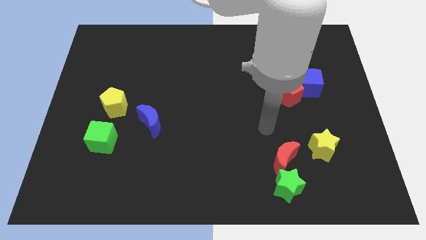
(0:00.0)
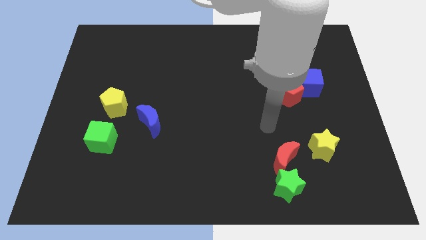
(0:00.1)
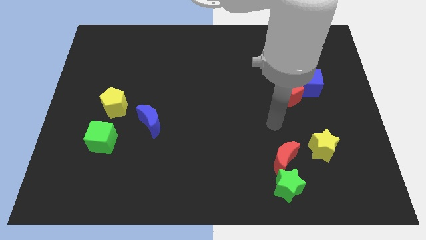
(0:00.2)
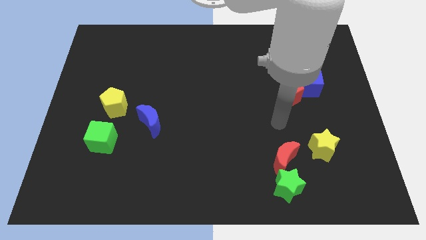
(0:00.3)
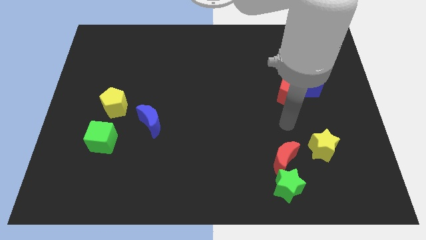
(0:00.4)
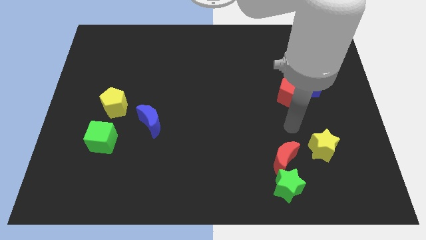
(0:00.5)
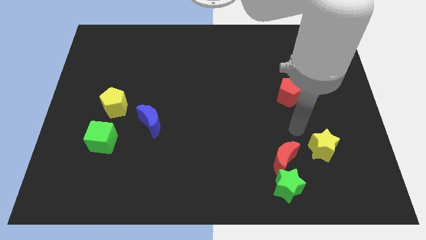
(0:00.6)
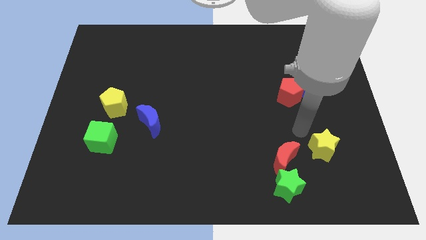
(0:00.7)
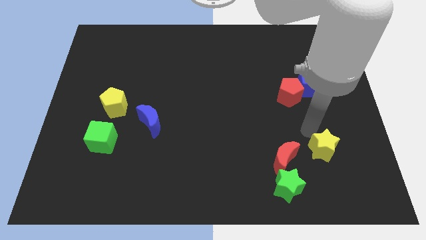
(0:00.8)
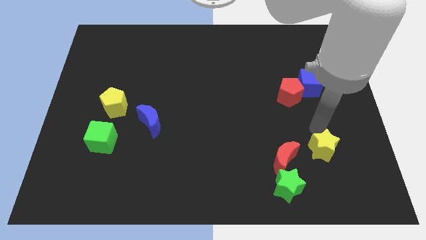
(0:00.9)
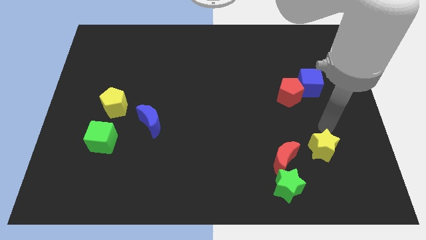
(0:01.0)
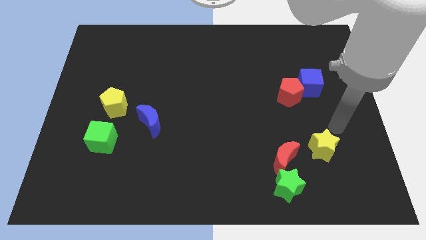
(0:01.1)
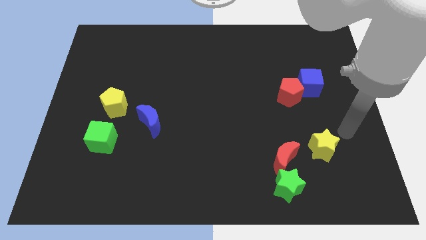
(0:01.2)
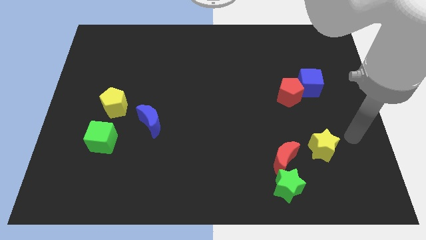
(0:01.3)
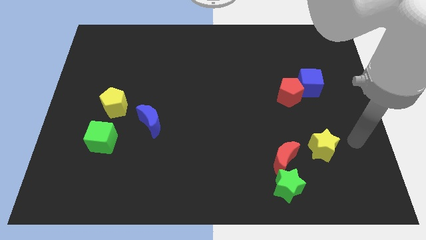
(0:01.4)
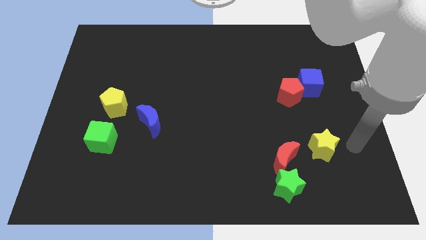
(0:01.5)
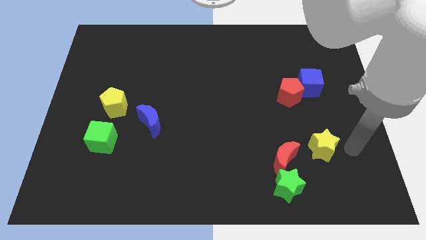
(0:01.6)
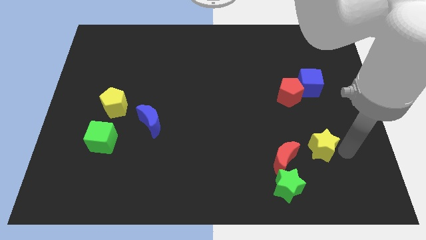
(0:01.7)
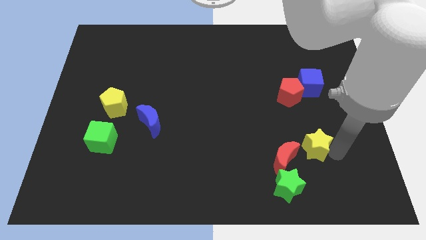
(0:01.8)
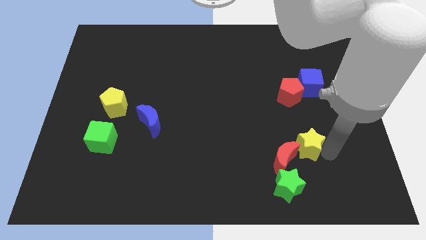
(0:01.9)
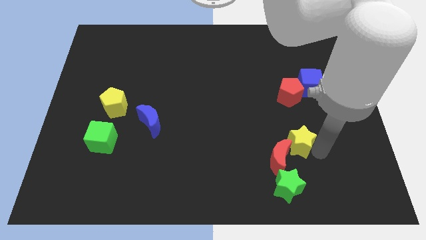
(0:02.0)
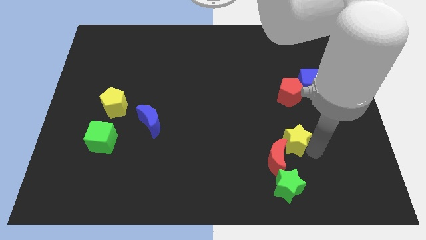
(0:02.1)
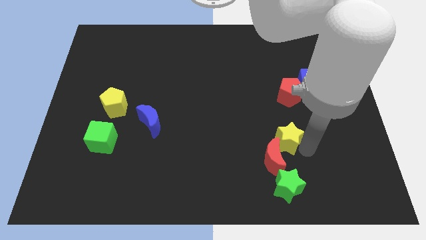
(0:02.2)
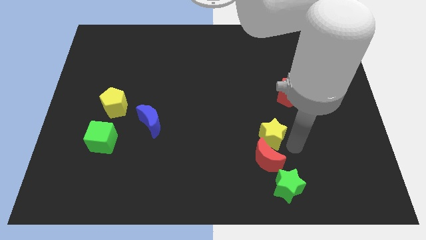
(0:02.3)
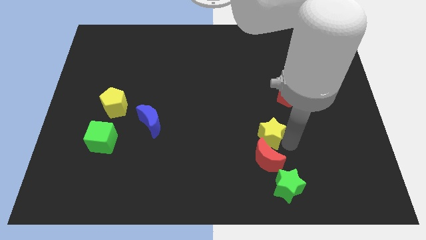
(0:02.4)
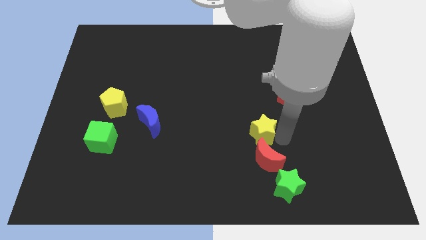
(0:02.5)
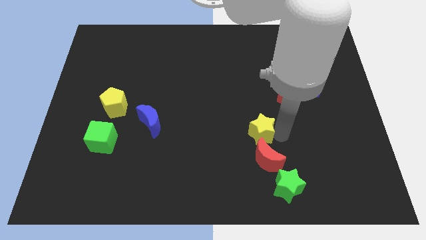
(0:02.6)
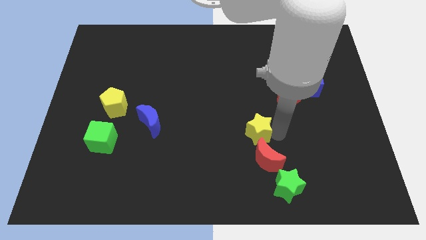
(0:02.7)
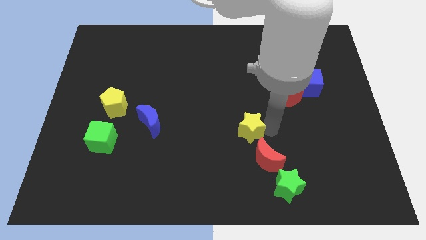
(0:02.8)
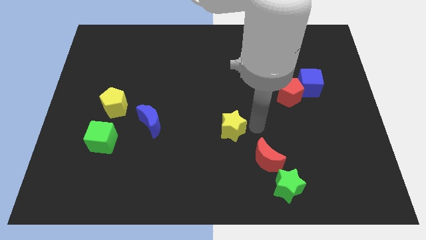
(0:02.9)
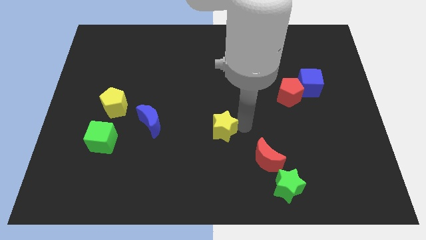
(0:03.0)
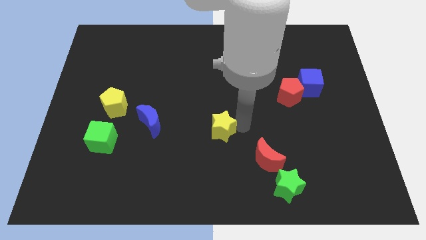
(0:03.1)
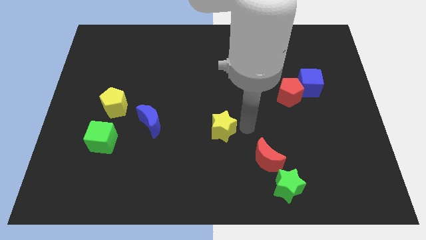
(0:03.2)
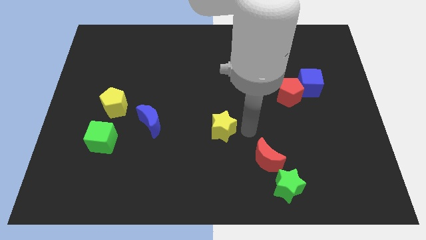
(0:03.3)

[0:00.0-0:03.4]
push the yellow star towards the center

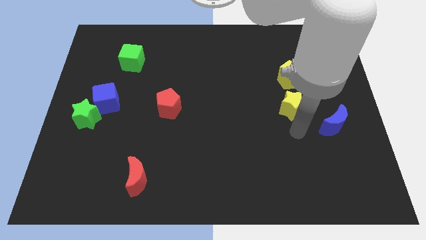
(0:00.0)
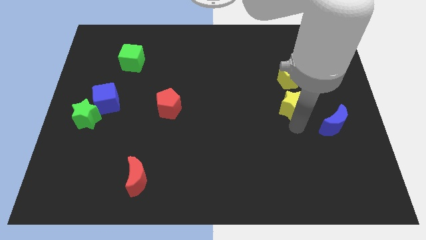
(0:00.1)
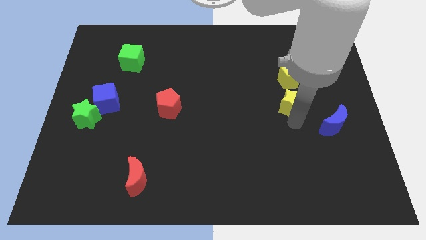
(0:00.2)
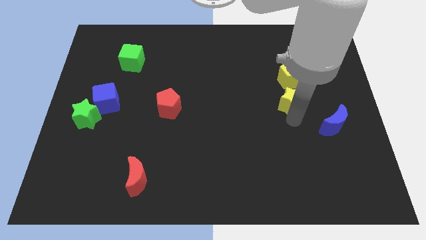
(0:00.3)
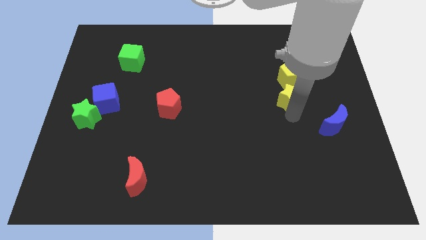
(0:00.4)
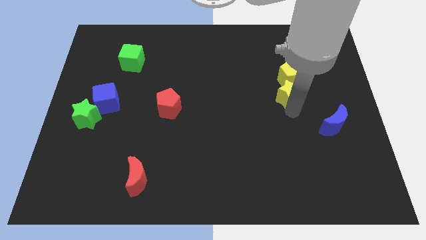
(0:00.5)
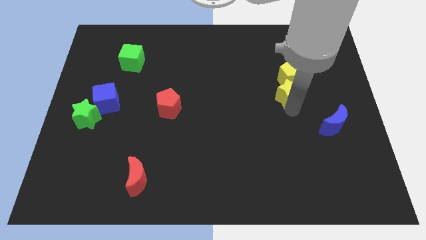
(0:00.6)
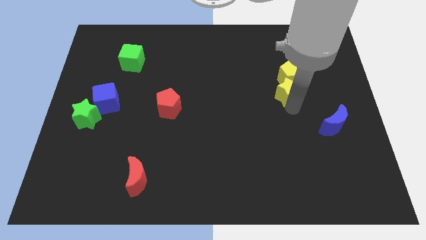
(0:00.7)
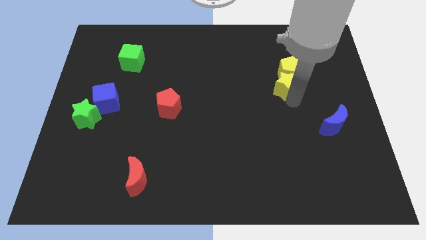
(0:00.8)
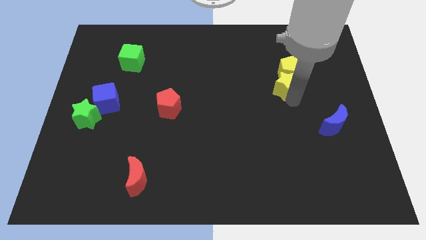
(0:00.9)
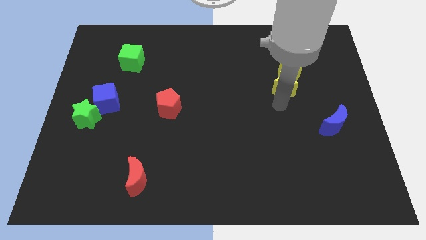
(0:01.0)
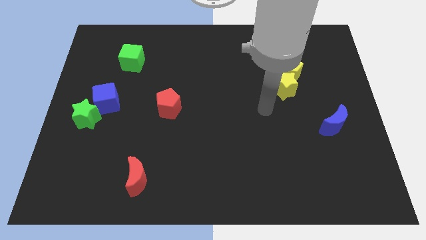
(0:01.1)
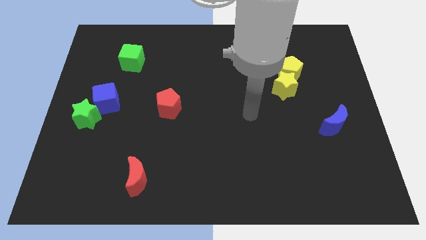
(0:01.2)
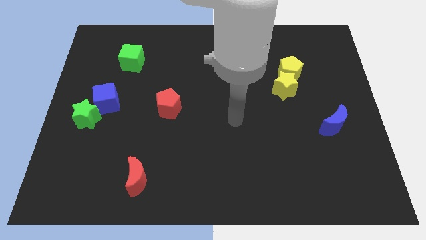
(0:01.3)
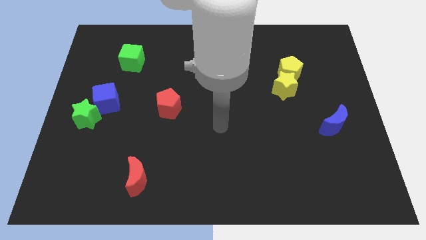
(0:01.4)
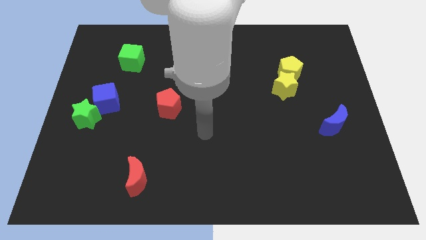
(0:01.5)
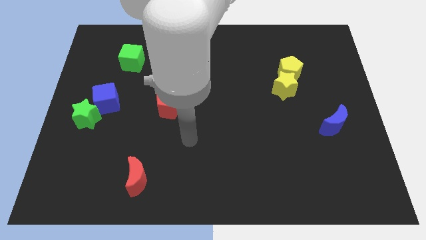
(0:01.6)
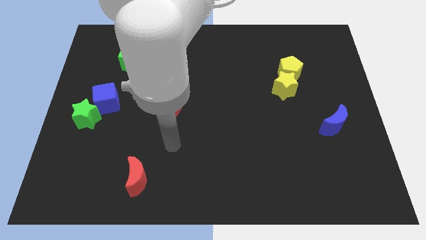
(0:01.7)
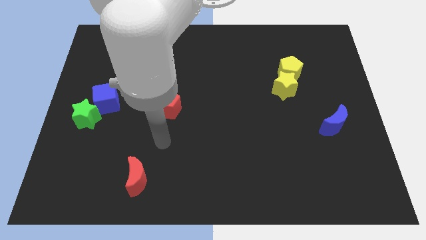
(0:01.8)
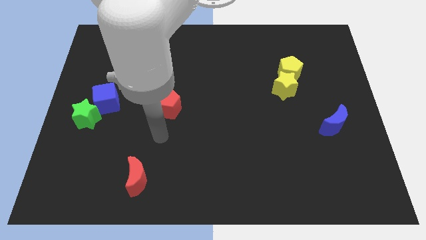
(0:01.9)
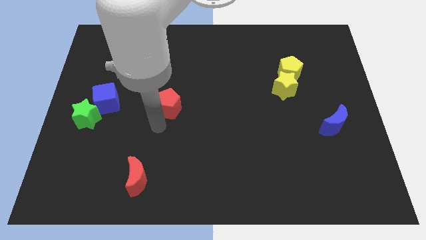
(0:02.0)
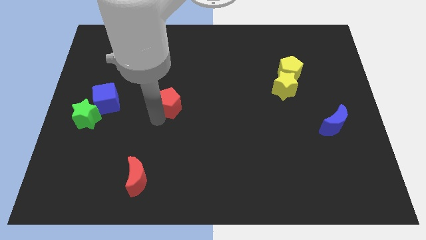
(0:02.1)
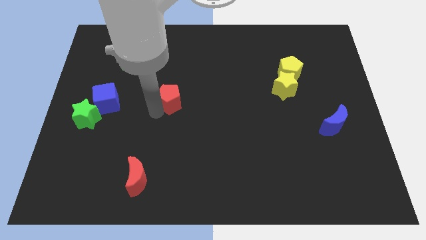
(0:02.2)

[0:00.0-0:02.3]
push the yellow star into the yellow pentagon

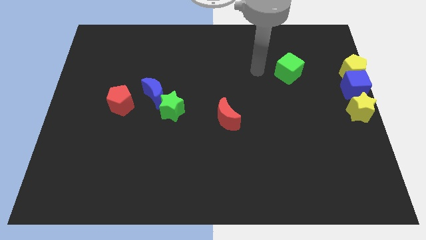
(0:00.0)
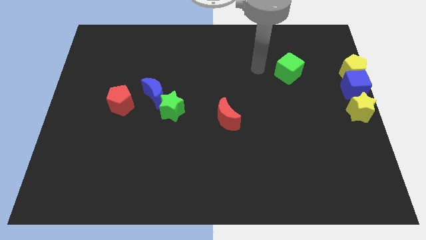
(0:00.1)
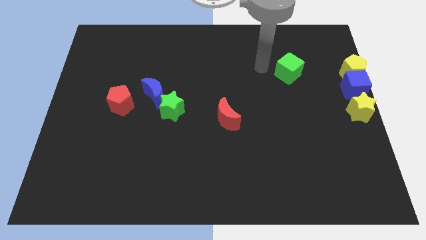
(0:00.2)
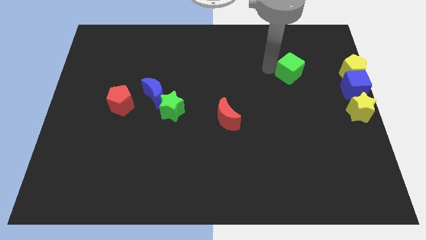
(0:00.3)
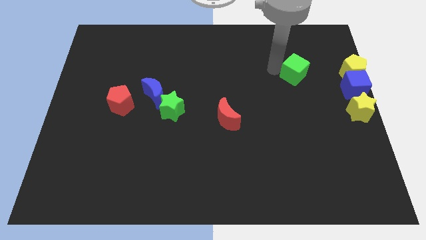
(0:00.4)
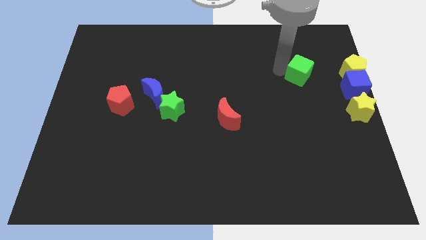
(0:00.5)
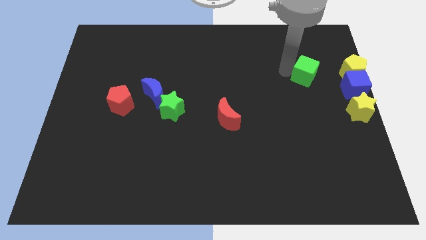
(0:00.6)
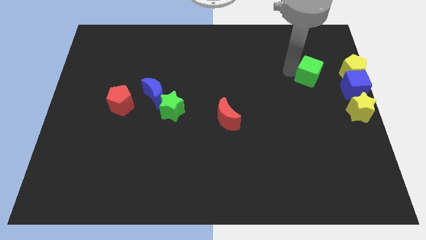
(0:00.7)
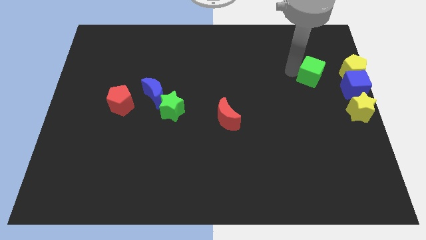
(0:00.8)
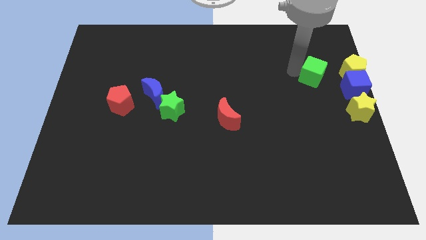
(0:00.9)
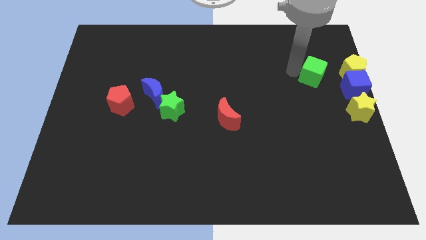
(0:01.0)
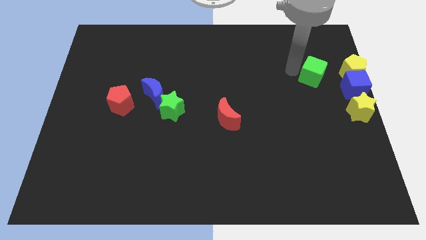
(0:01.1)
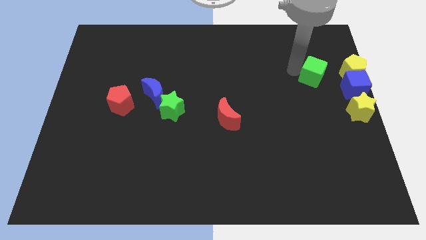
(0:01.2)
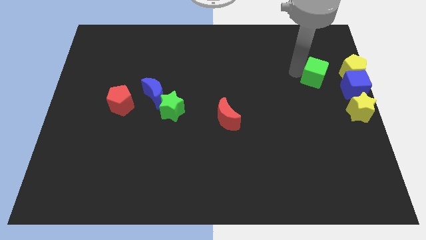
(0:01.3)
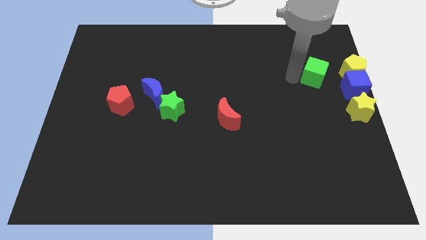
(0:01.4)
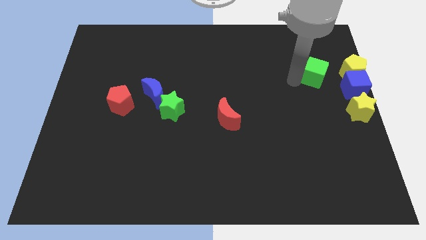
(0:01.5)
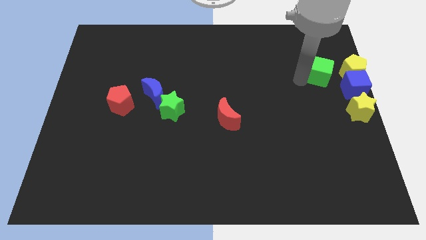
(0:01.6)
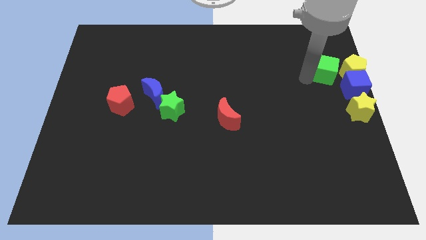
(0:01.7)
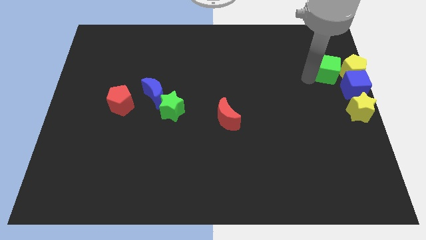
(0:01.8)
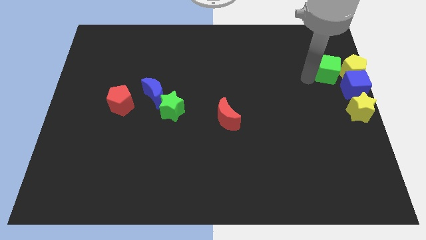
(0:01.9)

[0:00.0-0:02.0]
place green cube parallell to yellow pentagon

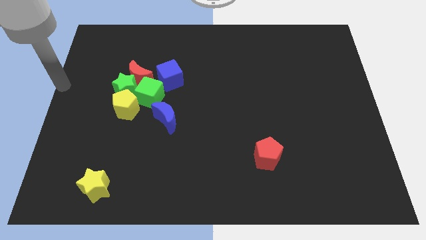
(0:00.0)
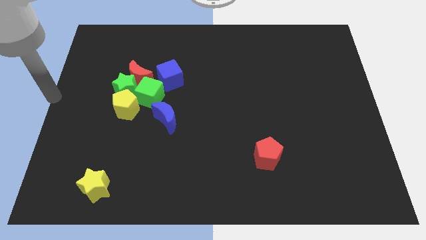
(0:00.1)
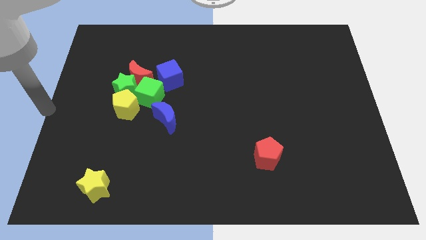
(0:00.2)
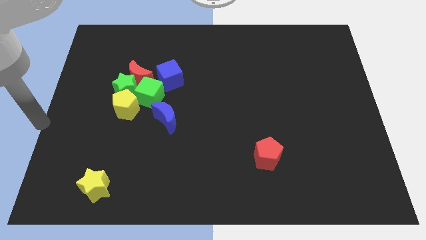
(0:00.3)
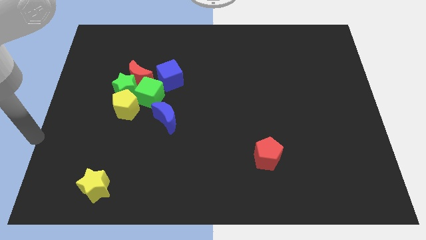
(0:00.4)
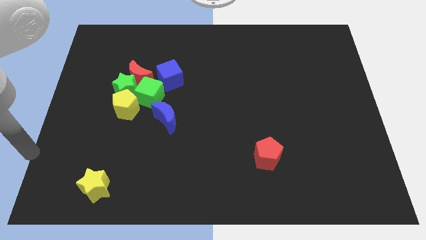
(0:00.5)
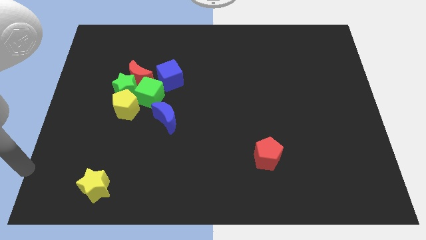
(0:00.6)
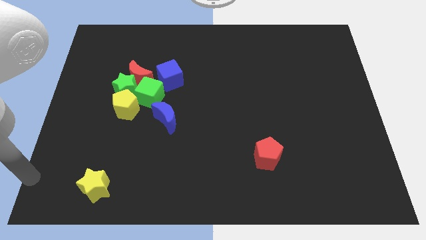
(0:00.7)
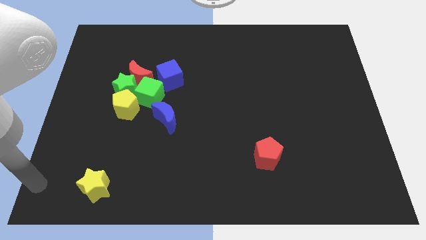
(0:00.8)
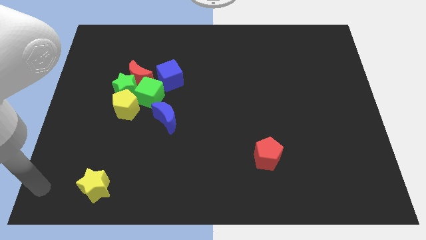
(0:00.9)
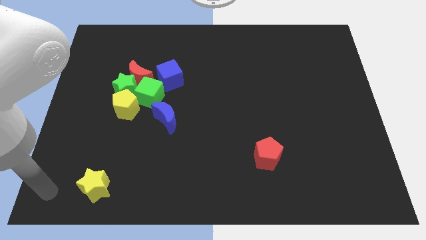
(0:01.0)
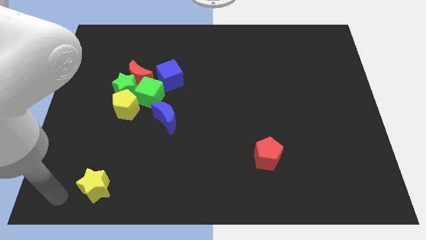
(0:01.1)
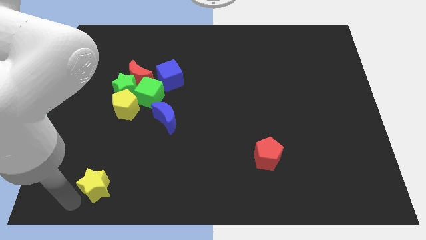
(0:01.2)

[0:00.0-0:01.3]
move your arm to the bottom of thr yellow star
